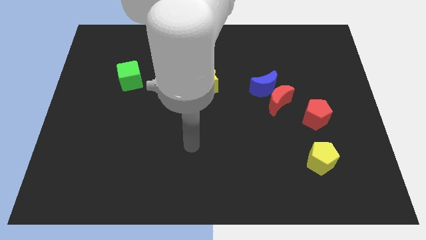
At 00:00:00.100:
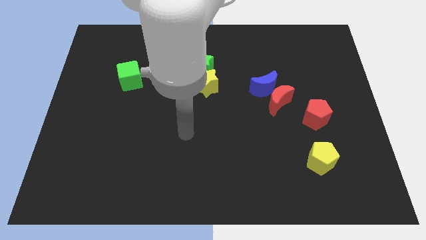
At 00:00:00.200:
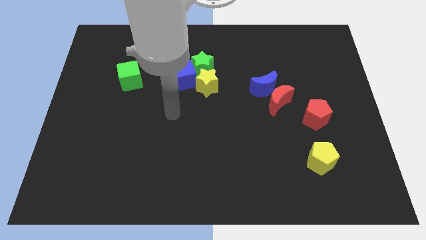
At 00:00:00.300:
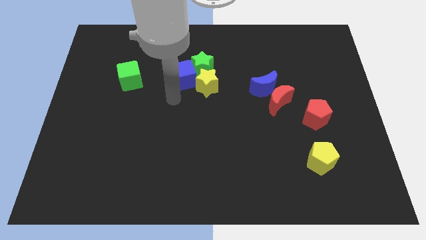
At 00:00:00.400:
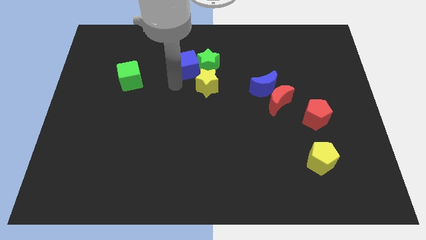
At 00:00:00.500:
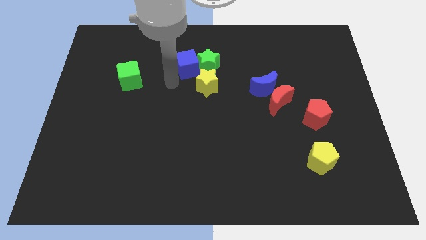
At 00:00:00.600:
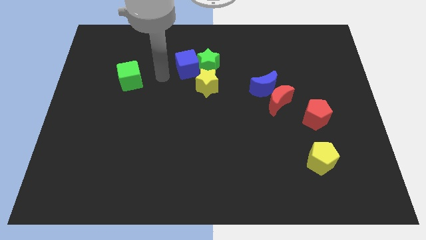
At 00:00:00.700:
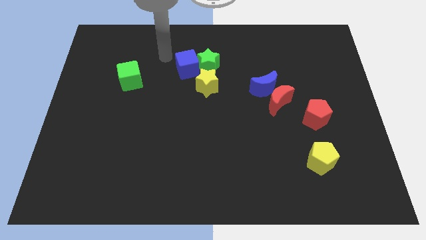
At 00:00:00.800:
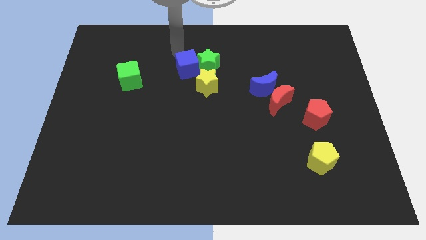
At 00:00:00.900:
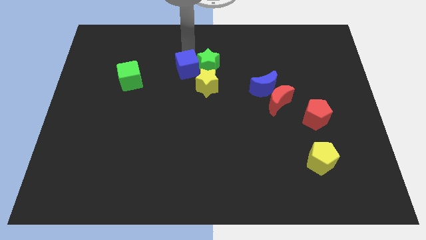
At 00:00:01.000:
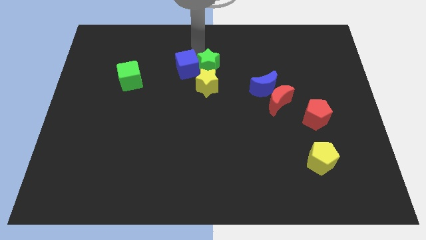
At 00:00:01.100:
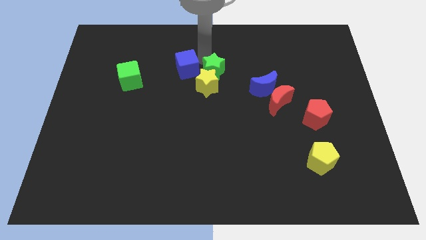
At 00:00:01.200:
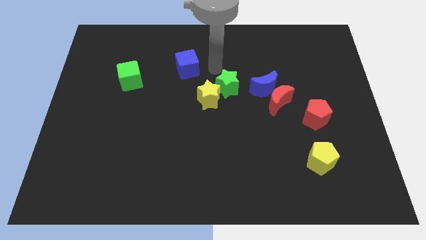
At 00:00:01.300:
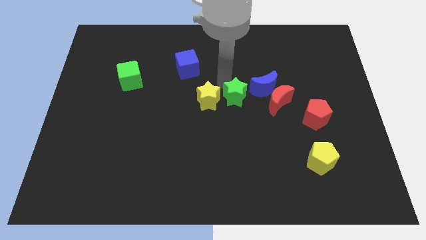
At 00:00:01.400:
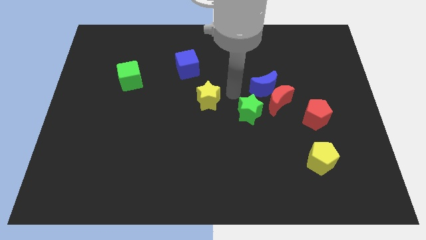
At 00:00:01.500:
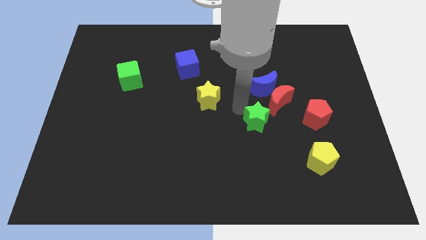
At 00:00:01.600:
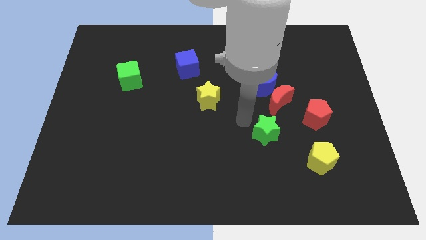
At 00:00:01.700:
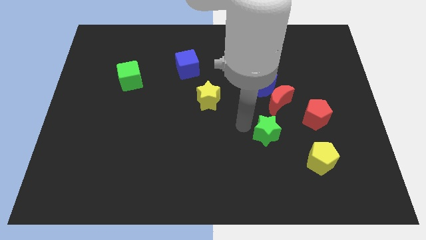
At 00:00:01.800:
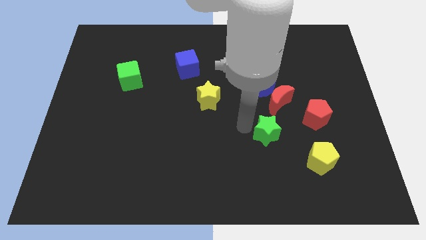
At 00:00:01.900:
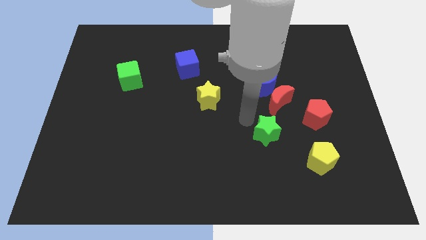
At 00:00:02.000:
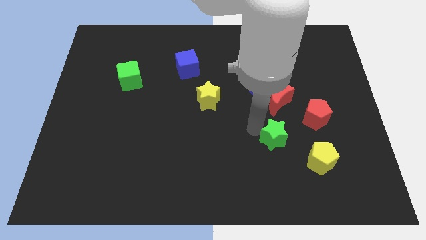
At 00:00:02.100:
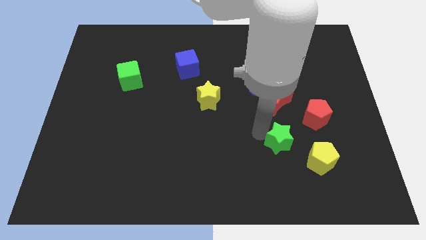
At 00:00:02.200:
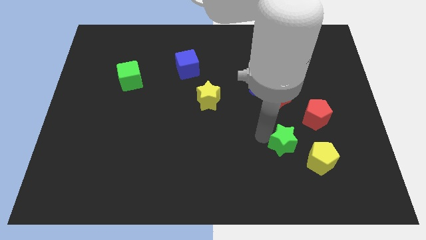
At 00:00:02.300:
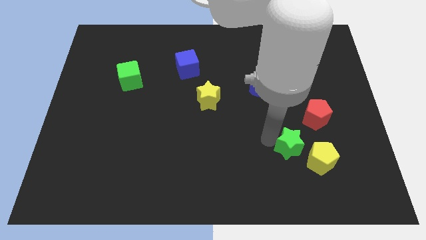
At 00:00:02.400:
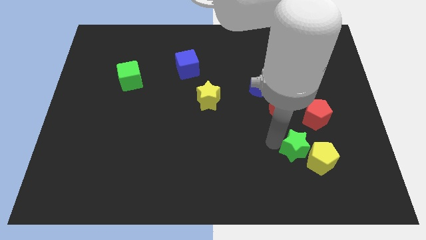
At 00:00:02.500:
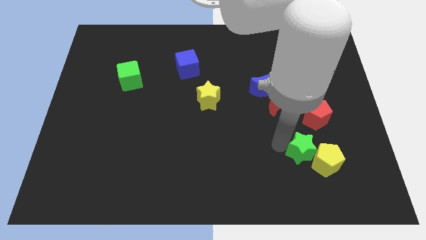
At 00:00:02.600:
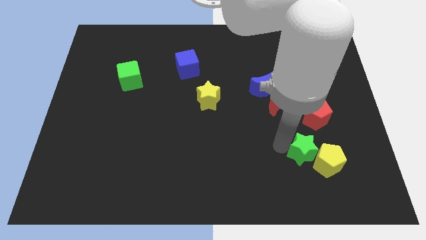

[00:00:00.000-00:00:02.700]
push the green star close to the yellow pentagon

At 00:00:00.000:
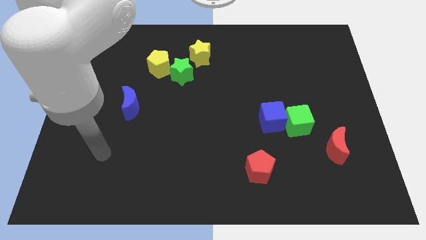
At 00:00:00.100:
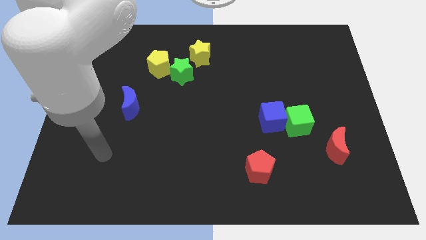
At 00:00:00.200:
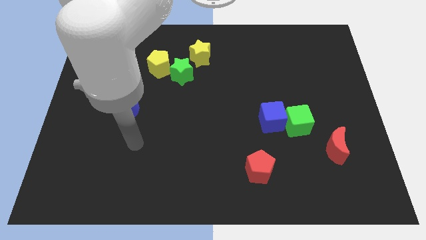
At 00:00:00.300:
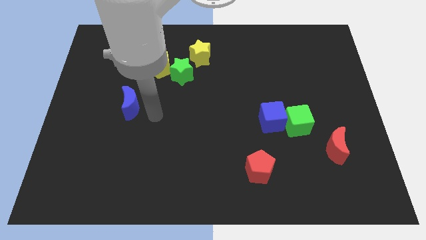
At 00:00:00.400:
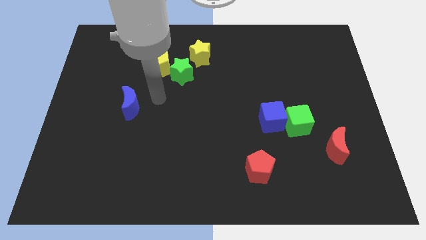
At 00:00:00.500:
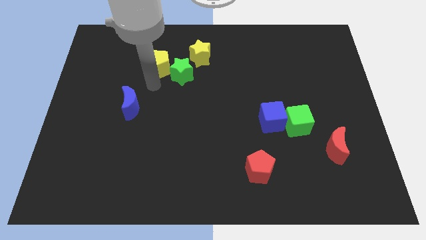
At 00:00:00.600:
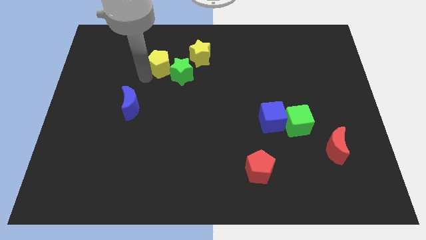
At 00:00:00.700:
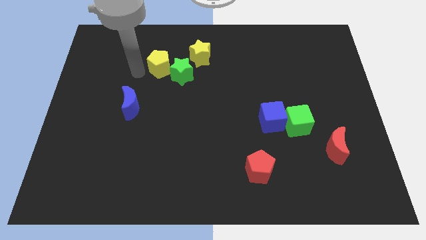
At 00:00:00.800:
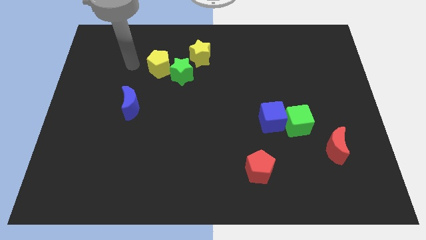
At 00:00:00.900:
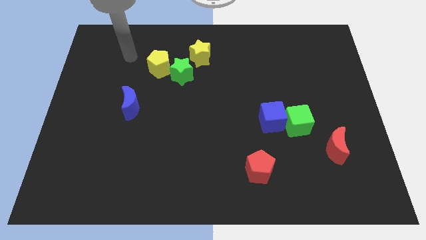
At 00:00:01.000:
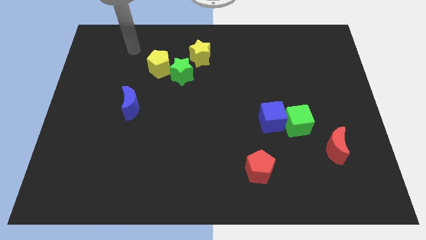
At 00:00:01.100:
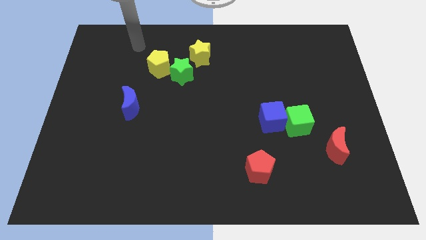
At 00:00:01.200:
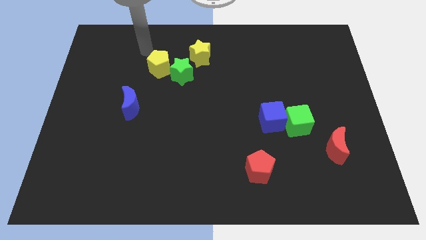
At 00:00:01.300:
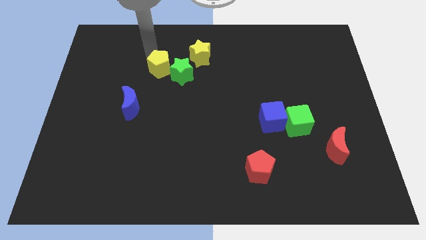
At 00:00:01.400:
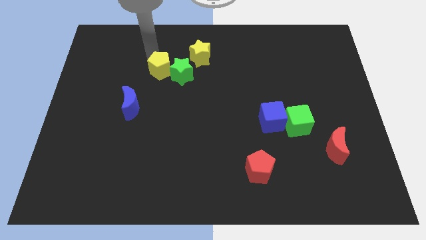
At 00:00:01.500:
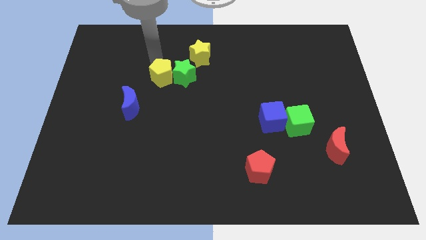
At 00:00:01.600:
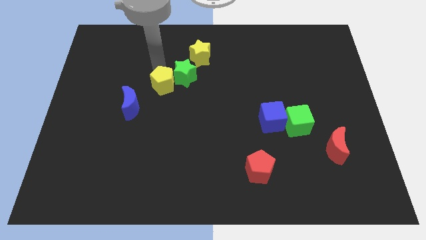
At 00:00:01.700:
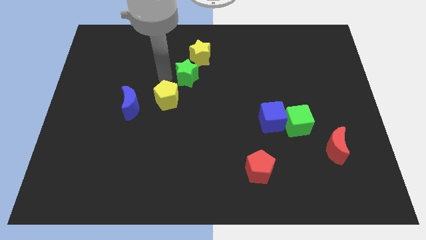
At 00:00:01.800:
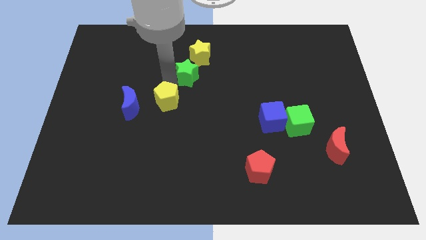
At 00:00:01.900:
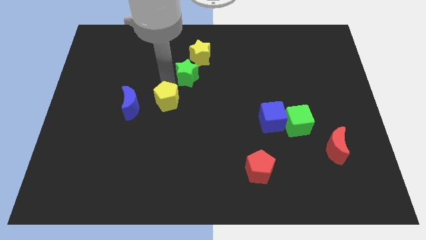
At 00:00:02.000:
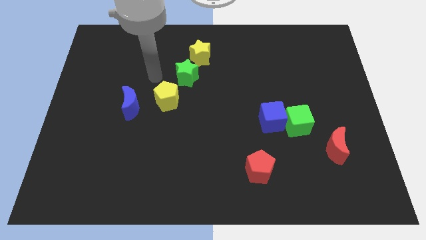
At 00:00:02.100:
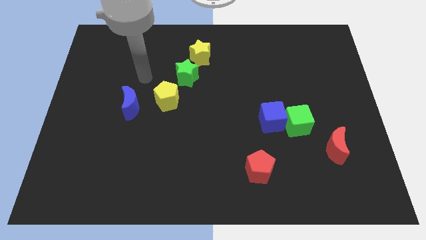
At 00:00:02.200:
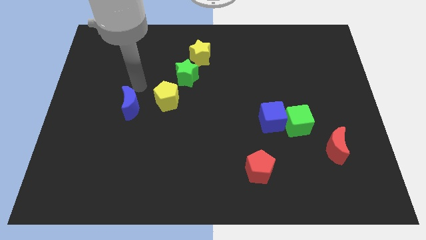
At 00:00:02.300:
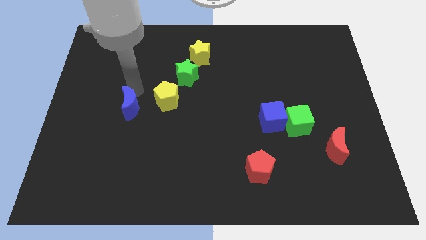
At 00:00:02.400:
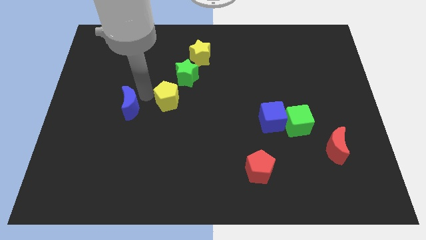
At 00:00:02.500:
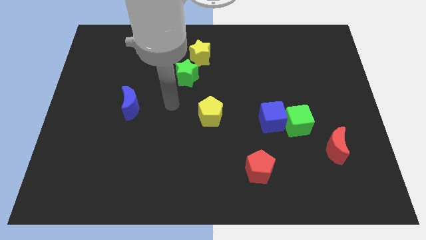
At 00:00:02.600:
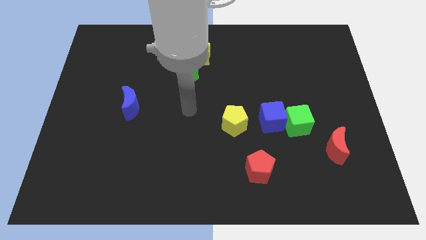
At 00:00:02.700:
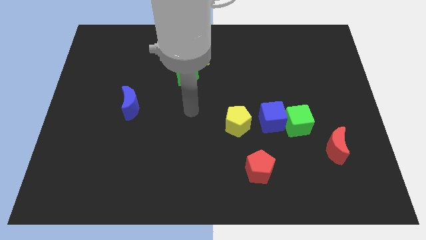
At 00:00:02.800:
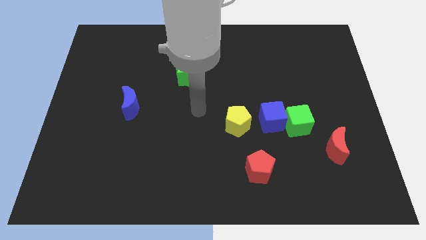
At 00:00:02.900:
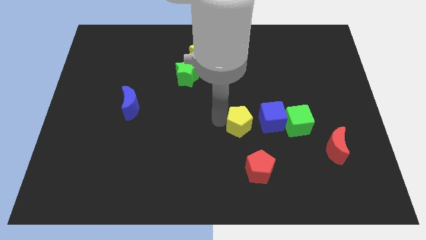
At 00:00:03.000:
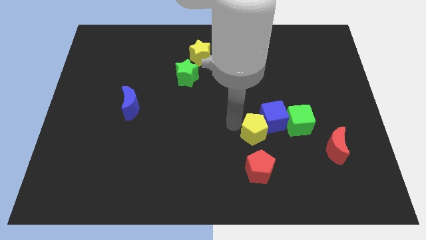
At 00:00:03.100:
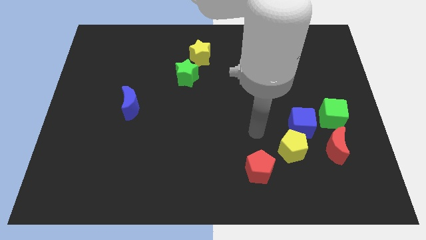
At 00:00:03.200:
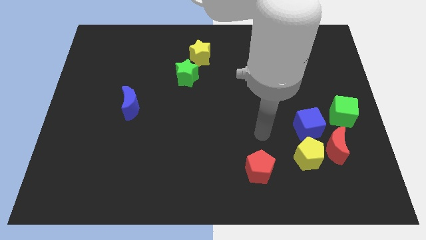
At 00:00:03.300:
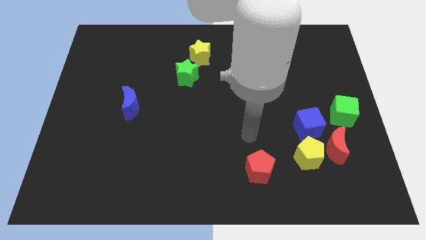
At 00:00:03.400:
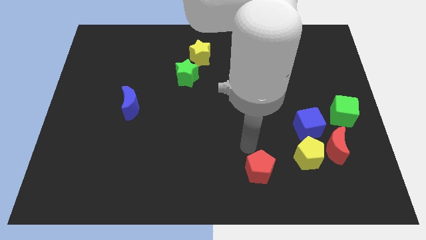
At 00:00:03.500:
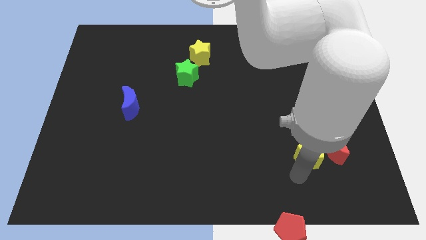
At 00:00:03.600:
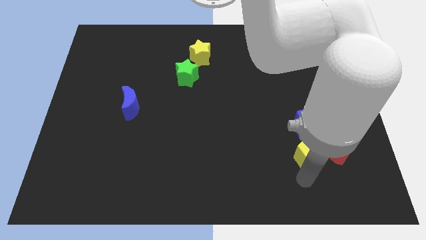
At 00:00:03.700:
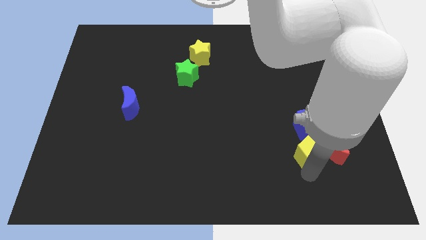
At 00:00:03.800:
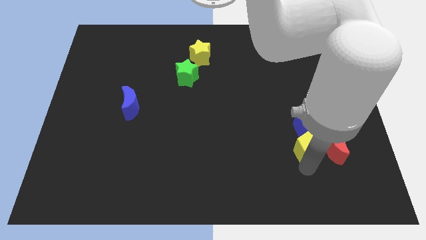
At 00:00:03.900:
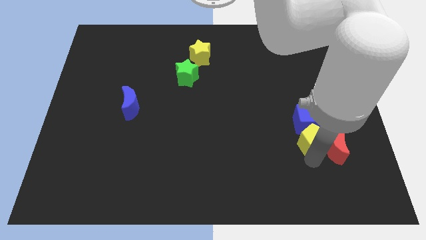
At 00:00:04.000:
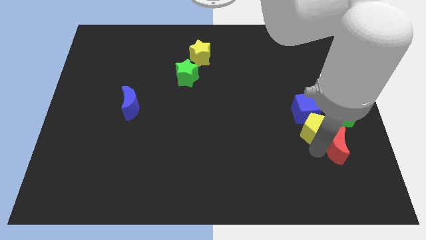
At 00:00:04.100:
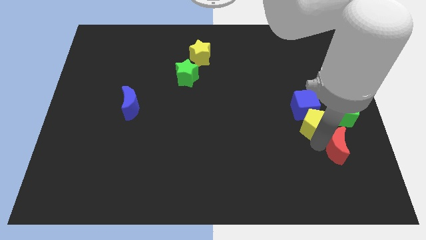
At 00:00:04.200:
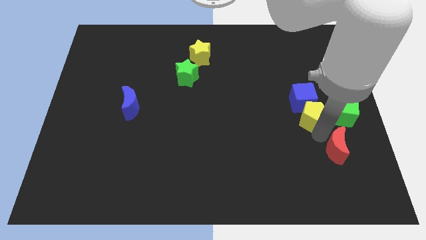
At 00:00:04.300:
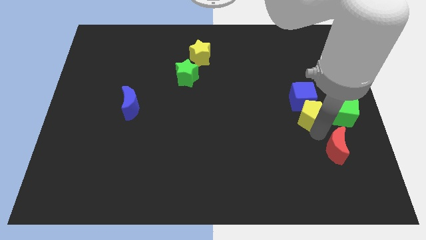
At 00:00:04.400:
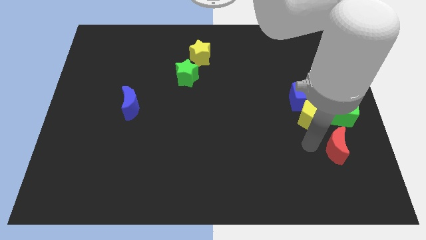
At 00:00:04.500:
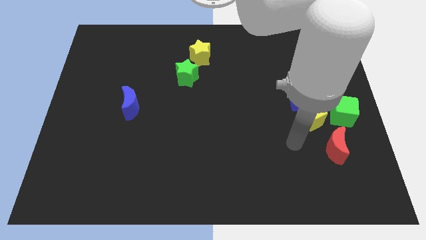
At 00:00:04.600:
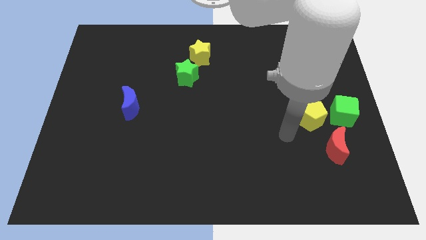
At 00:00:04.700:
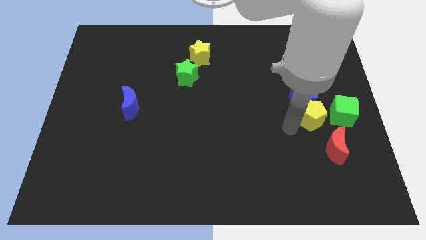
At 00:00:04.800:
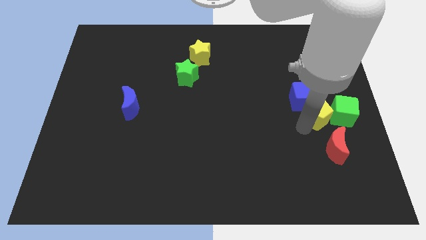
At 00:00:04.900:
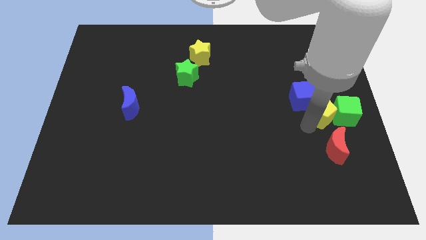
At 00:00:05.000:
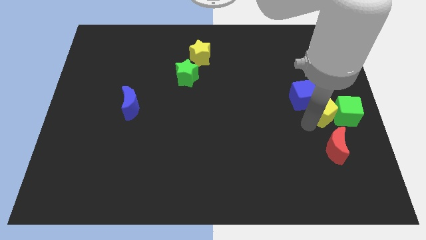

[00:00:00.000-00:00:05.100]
slide the yellow pentagon towards the green cube

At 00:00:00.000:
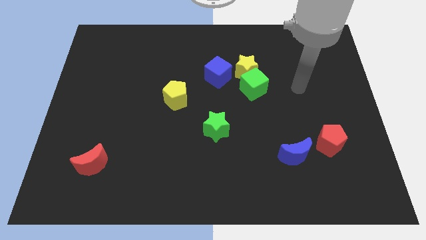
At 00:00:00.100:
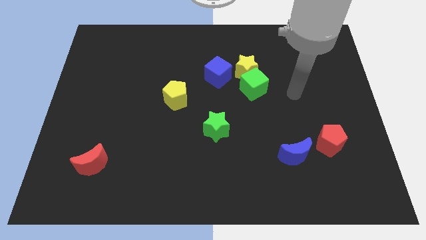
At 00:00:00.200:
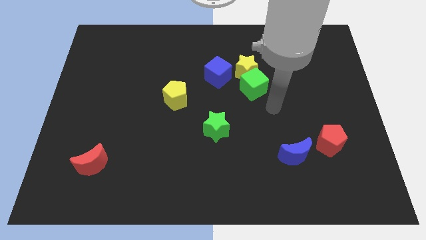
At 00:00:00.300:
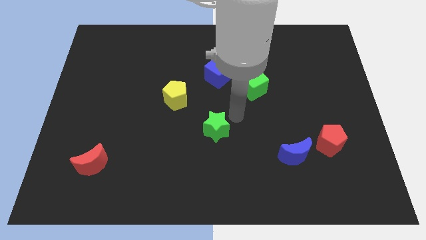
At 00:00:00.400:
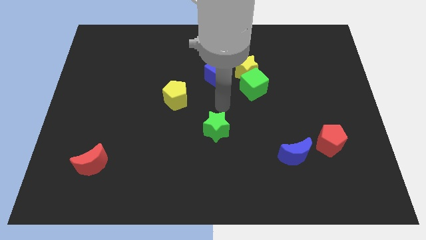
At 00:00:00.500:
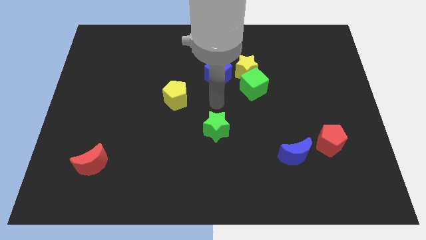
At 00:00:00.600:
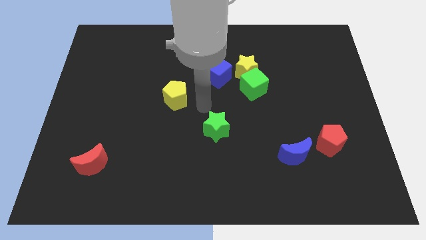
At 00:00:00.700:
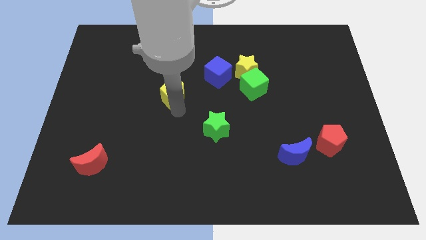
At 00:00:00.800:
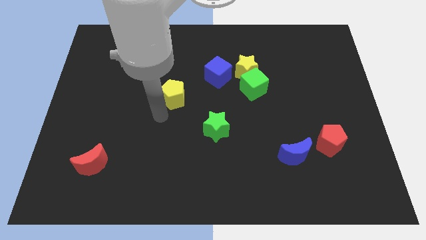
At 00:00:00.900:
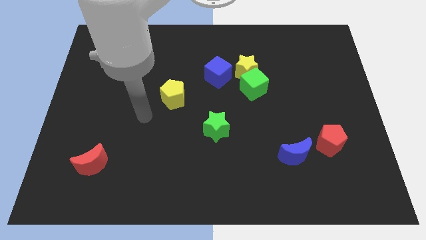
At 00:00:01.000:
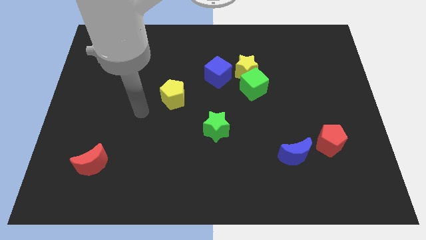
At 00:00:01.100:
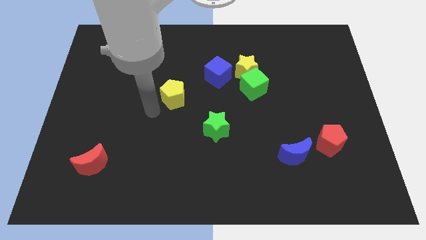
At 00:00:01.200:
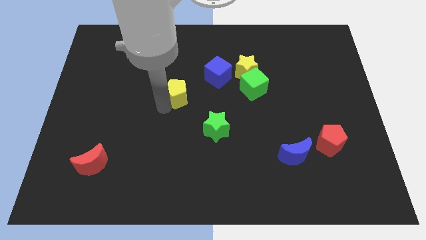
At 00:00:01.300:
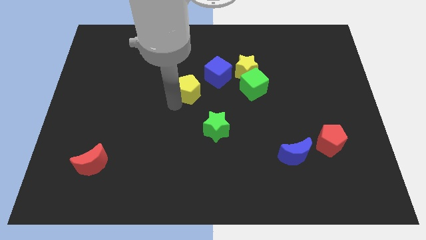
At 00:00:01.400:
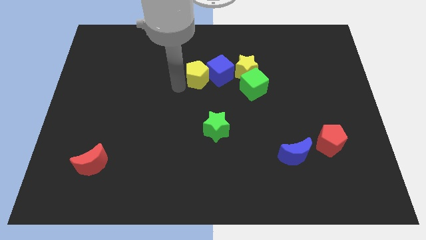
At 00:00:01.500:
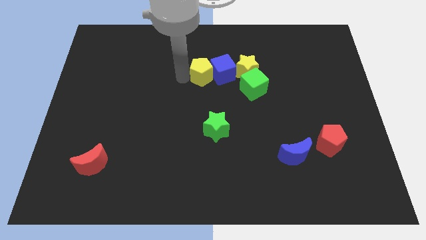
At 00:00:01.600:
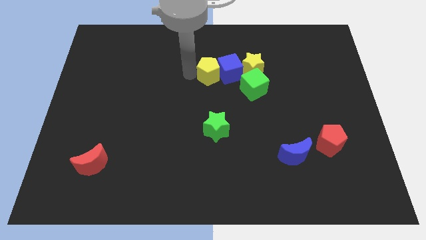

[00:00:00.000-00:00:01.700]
slide the yellow pentagon towards the blue cube
